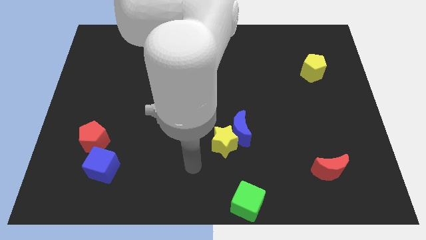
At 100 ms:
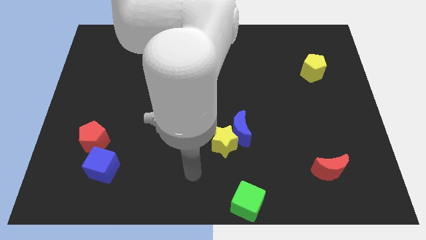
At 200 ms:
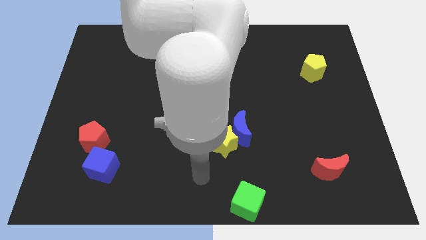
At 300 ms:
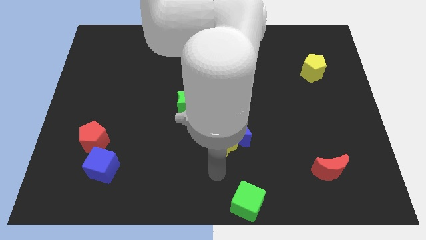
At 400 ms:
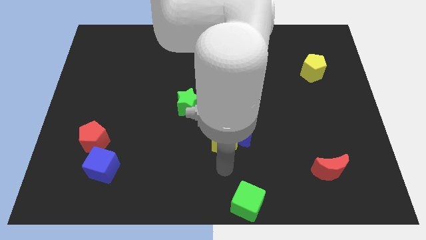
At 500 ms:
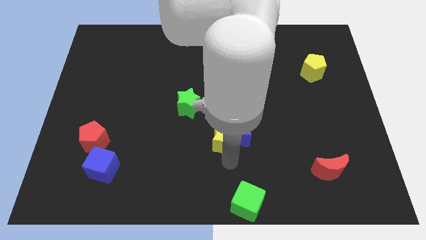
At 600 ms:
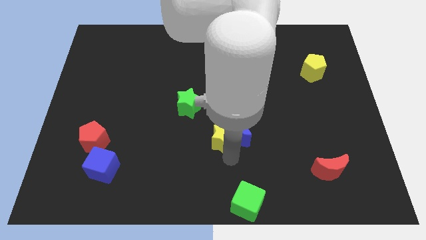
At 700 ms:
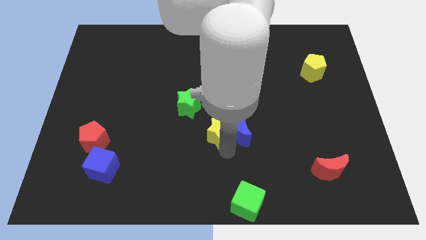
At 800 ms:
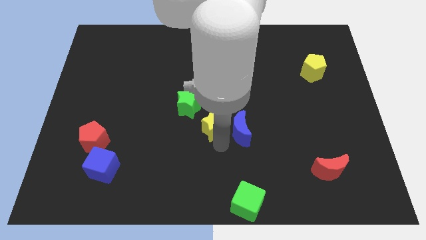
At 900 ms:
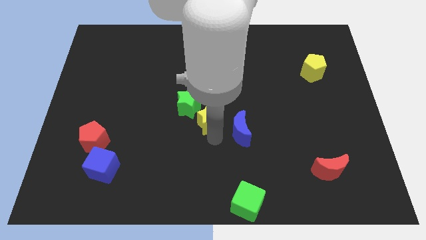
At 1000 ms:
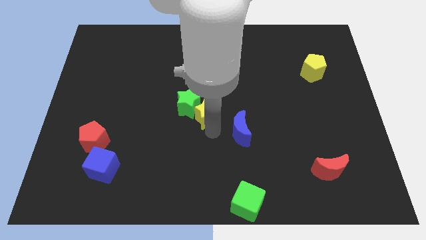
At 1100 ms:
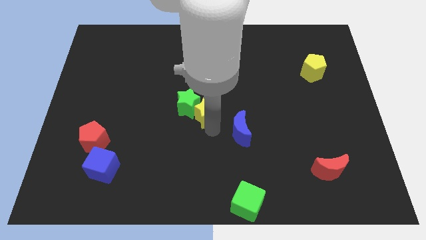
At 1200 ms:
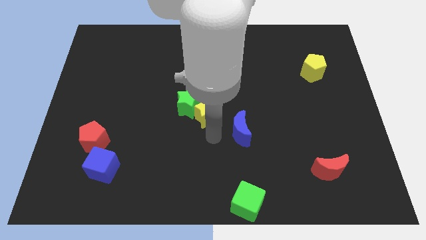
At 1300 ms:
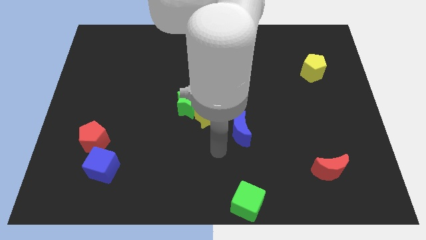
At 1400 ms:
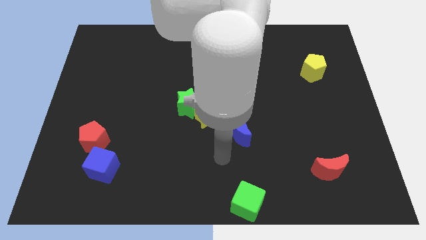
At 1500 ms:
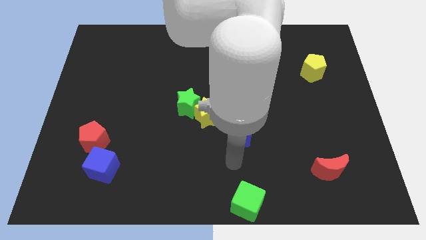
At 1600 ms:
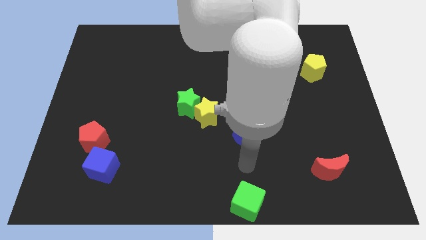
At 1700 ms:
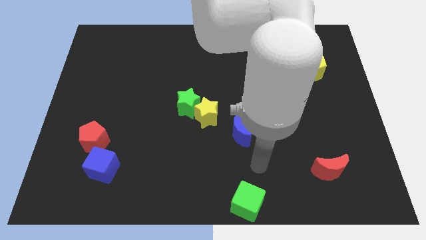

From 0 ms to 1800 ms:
move yellow star into green star

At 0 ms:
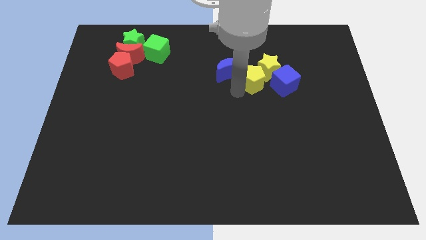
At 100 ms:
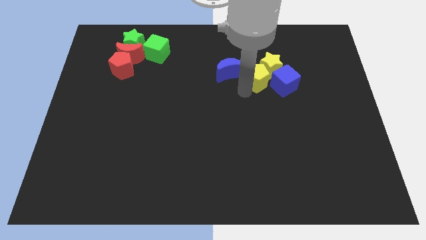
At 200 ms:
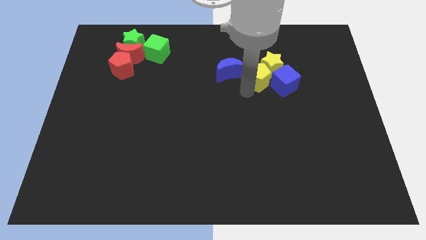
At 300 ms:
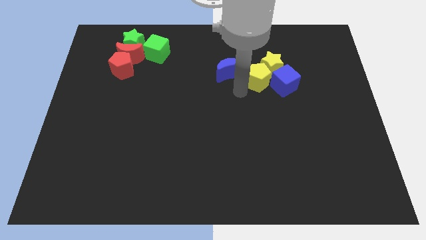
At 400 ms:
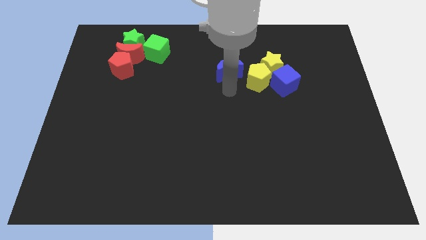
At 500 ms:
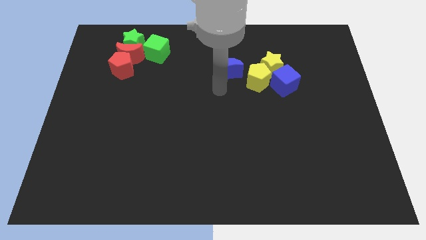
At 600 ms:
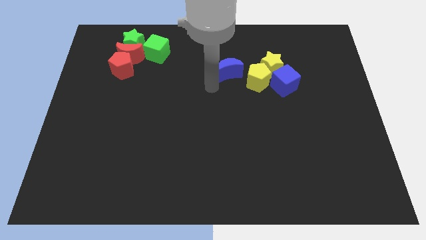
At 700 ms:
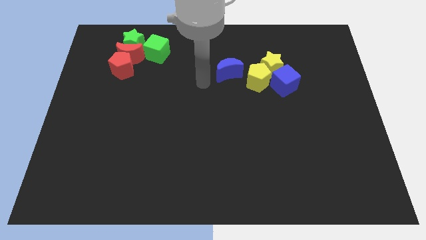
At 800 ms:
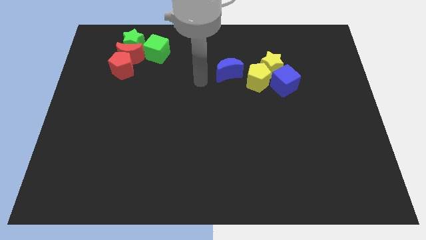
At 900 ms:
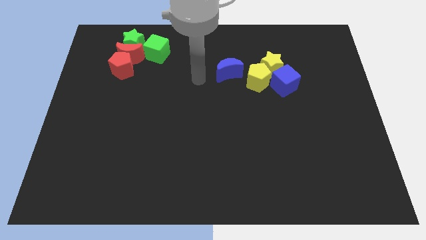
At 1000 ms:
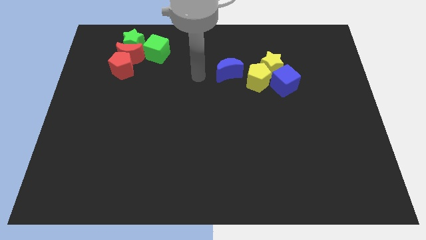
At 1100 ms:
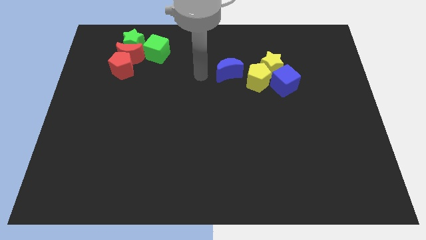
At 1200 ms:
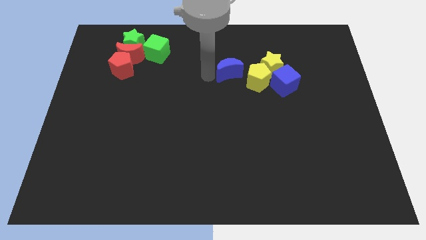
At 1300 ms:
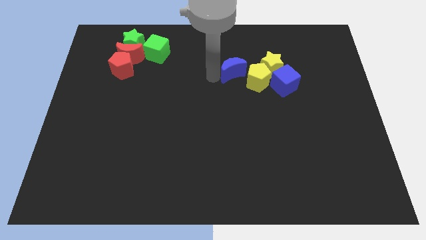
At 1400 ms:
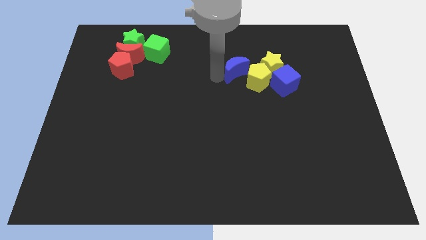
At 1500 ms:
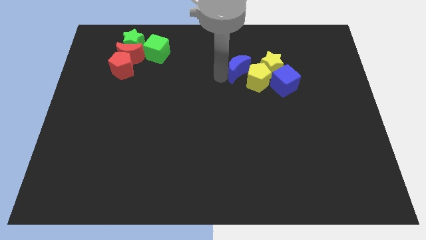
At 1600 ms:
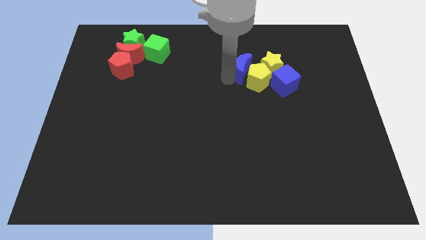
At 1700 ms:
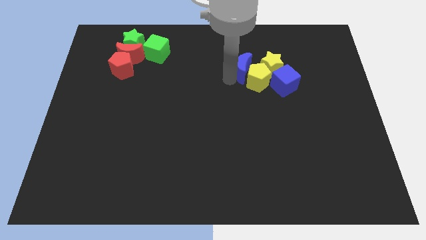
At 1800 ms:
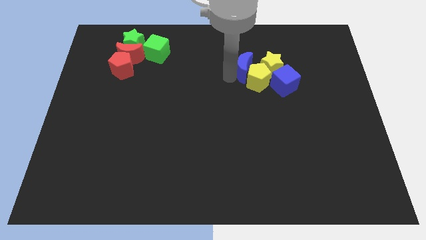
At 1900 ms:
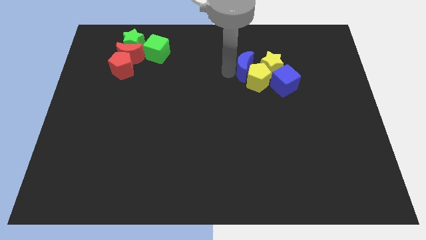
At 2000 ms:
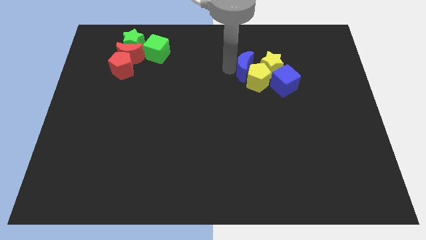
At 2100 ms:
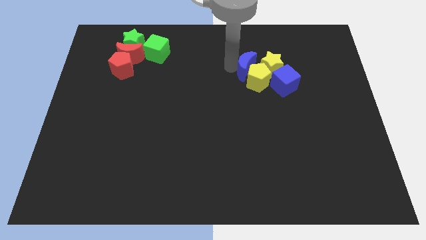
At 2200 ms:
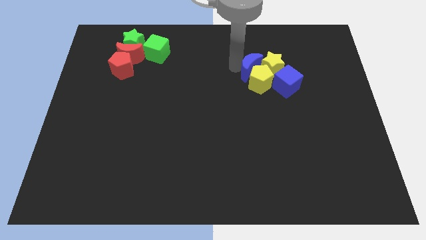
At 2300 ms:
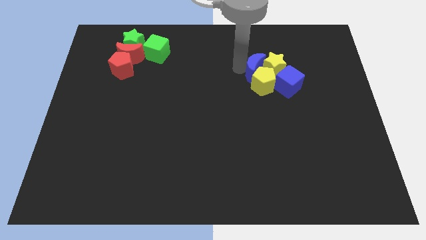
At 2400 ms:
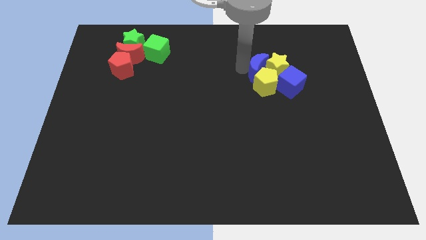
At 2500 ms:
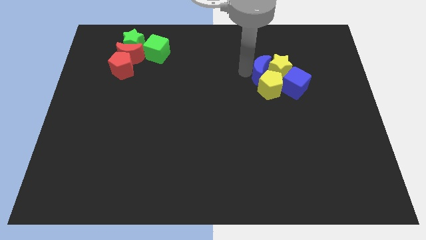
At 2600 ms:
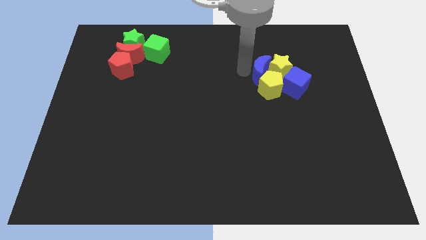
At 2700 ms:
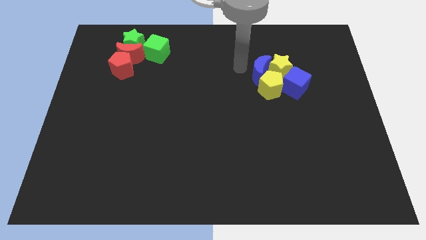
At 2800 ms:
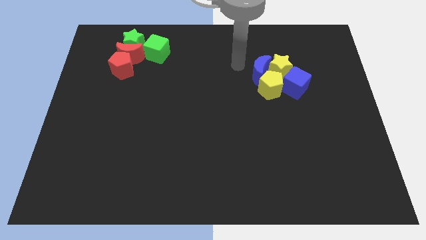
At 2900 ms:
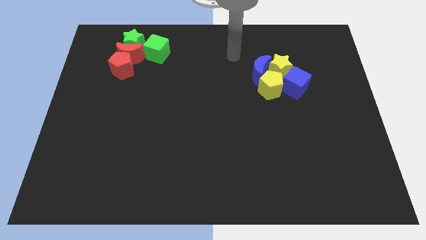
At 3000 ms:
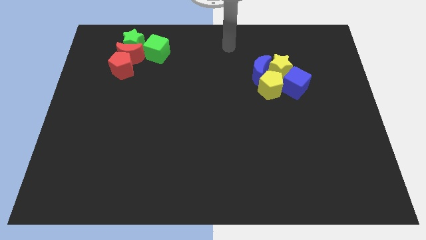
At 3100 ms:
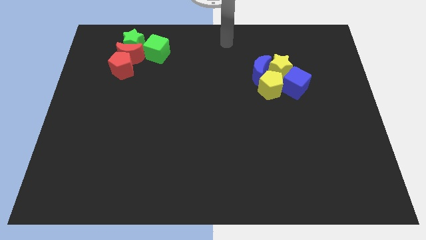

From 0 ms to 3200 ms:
push the blue moon into the yellow blocks

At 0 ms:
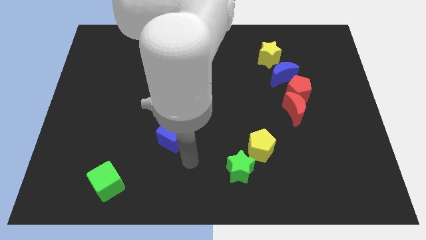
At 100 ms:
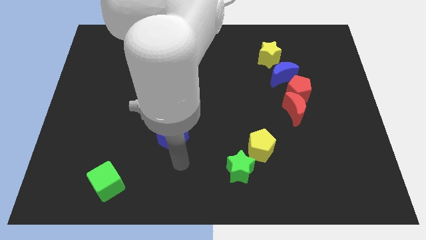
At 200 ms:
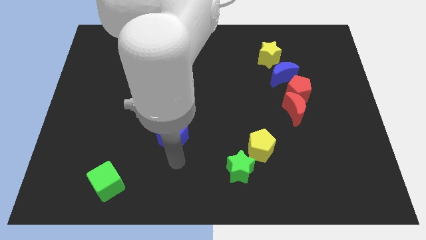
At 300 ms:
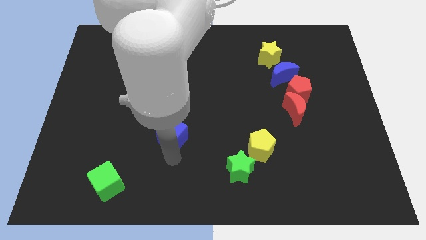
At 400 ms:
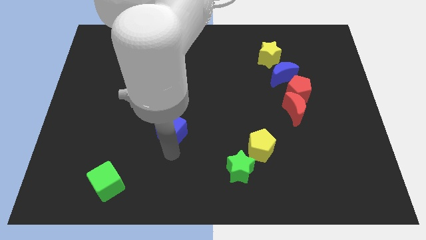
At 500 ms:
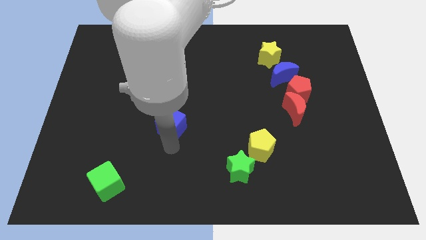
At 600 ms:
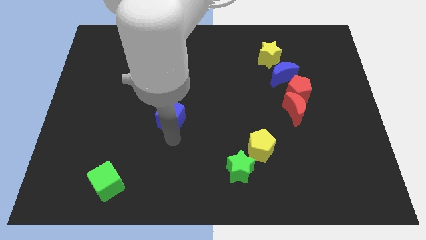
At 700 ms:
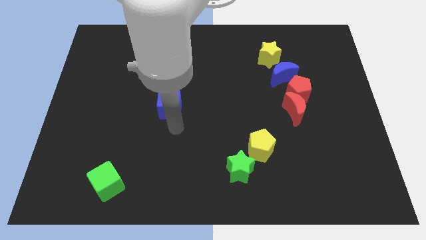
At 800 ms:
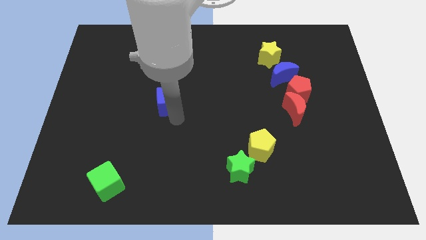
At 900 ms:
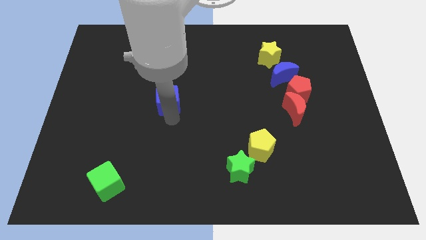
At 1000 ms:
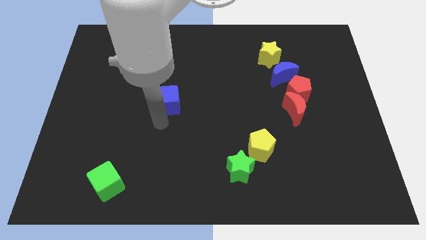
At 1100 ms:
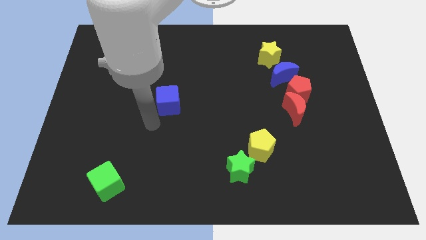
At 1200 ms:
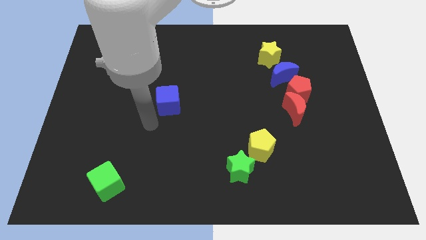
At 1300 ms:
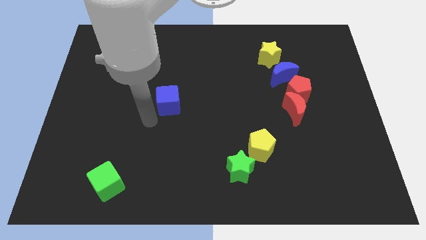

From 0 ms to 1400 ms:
move the blue cube slightly towards top side of the board

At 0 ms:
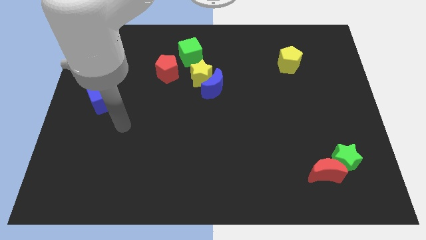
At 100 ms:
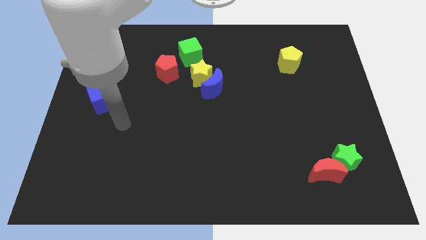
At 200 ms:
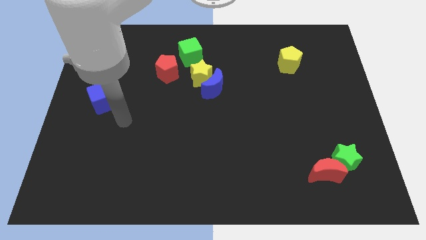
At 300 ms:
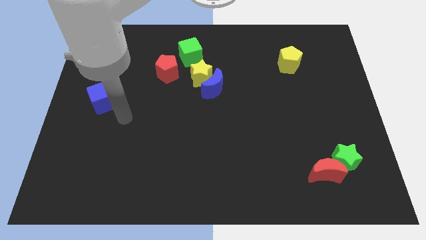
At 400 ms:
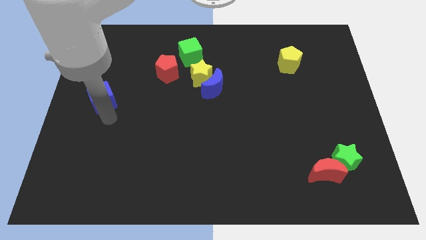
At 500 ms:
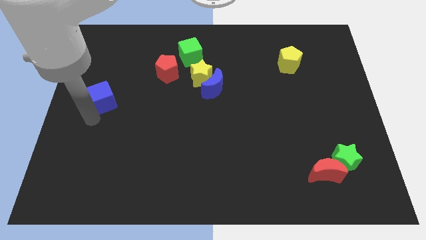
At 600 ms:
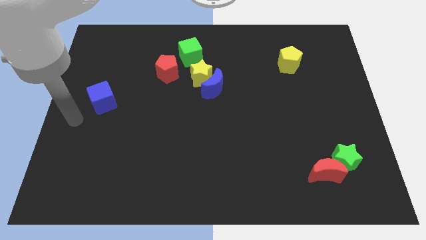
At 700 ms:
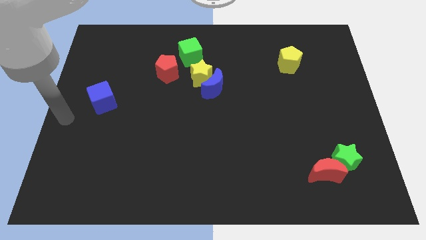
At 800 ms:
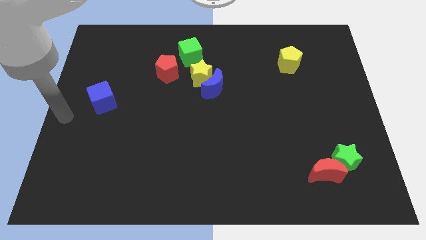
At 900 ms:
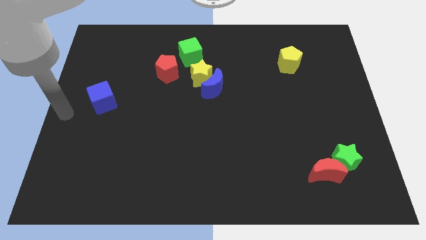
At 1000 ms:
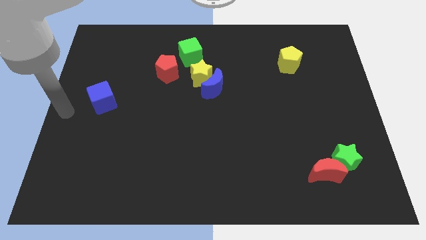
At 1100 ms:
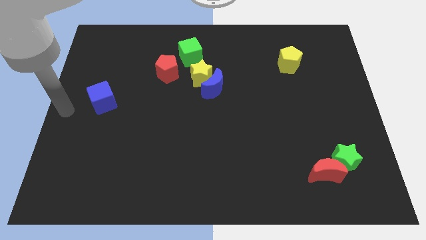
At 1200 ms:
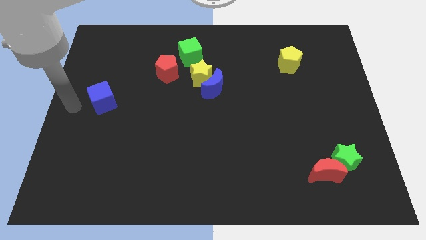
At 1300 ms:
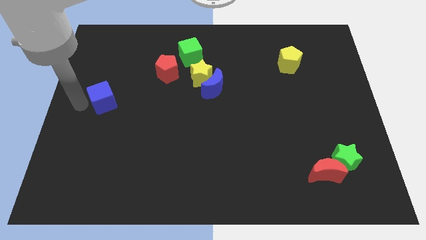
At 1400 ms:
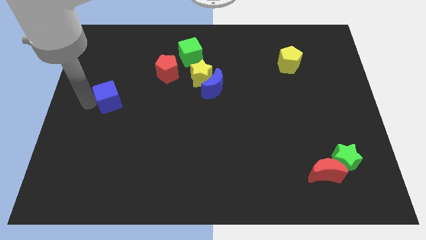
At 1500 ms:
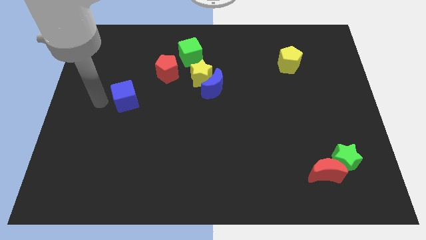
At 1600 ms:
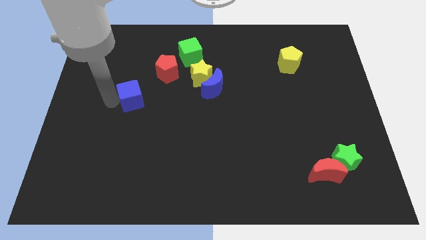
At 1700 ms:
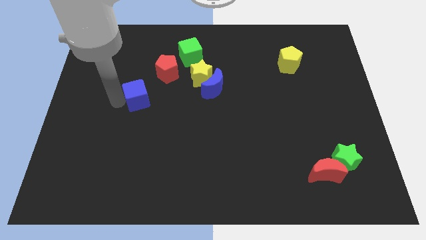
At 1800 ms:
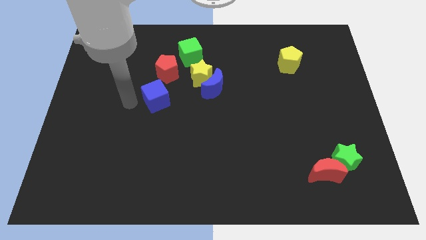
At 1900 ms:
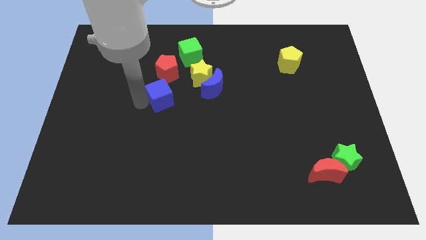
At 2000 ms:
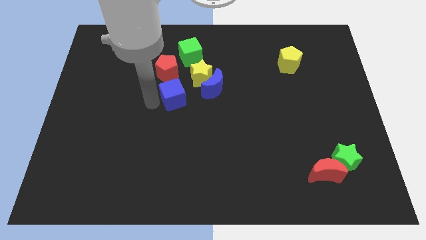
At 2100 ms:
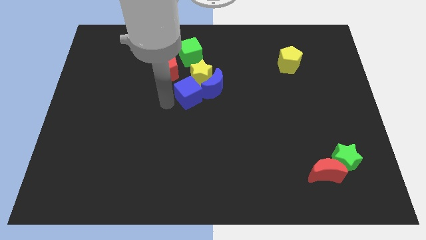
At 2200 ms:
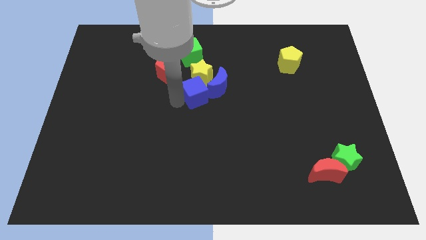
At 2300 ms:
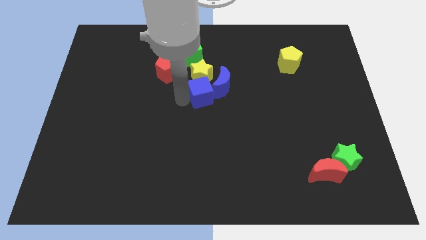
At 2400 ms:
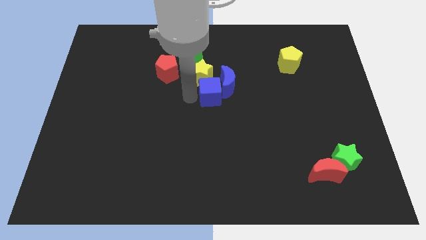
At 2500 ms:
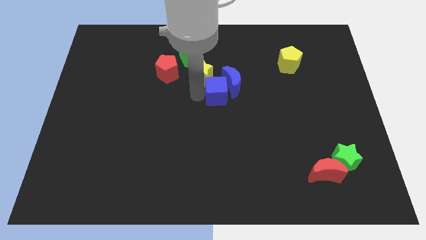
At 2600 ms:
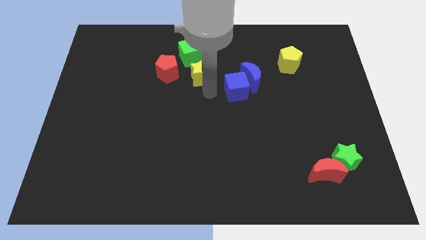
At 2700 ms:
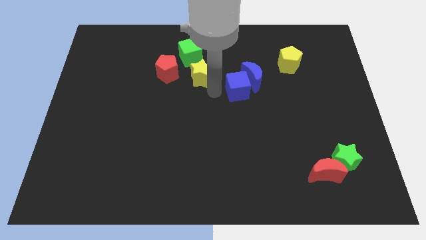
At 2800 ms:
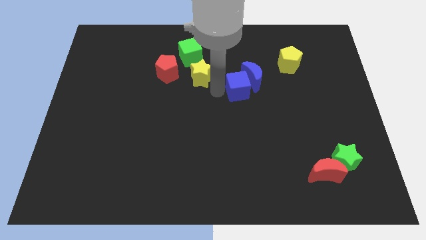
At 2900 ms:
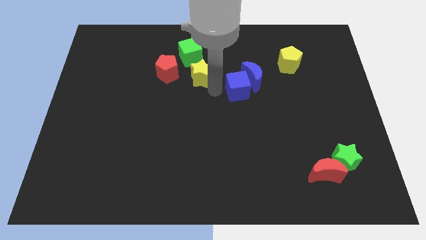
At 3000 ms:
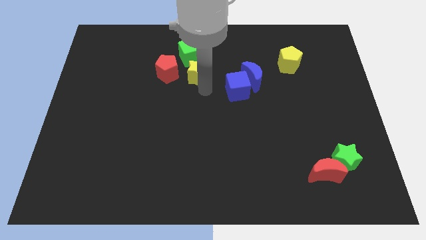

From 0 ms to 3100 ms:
slide blue cube into blue moon
